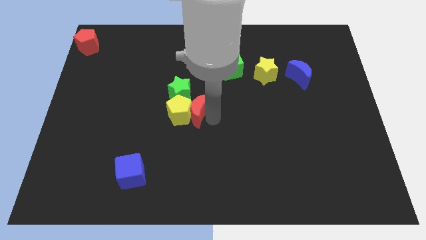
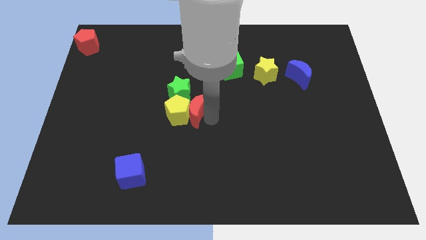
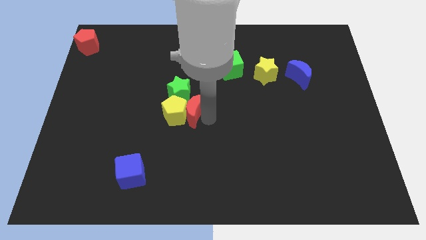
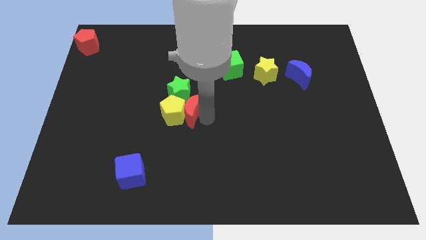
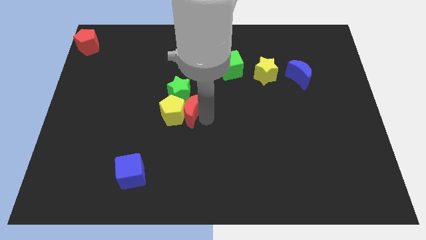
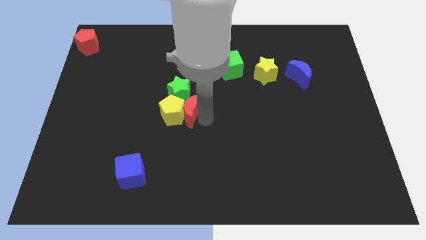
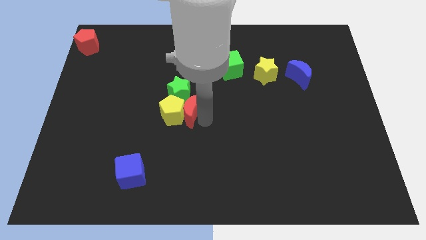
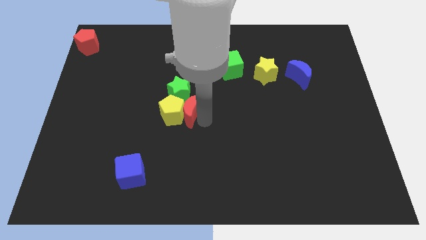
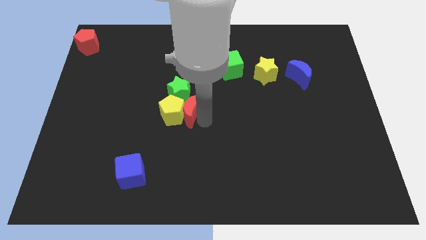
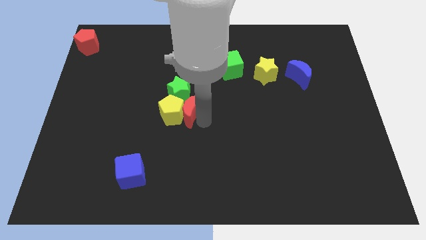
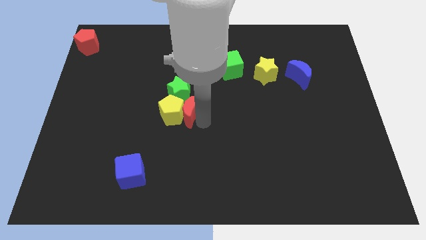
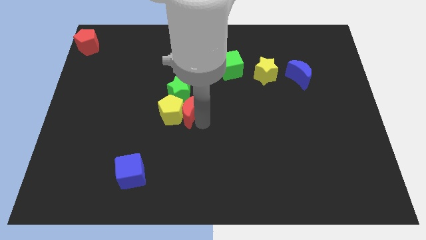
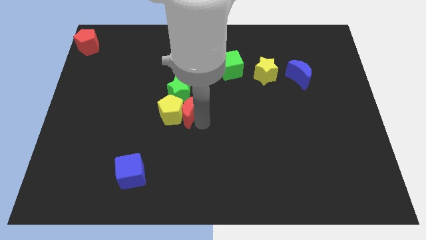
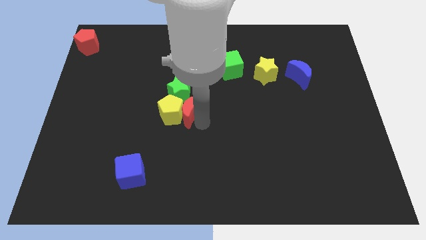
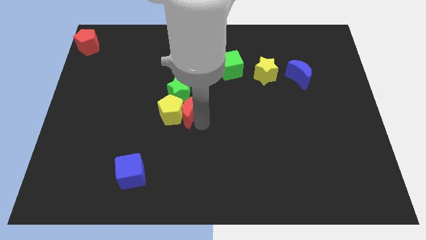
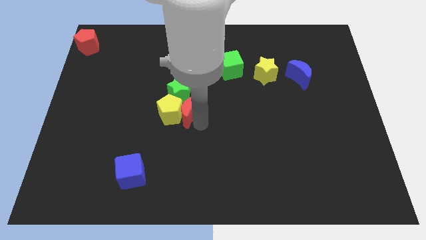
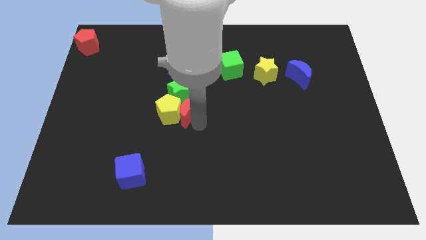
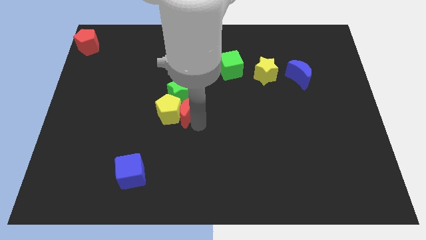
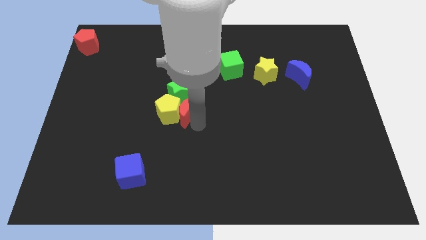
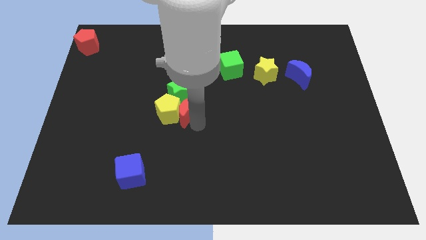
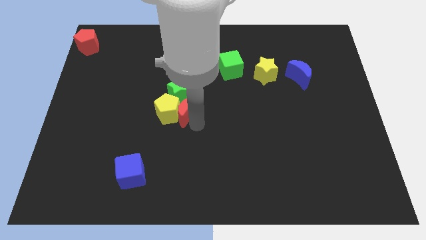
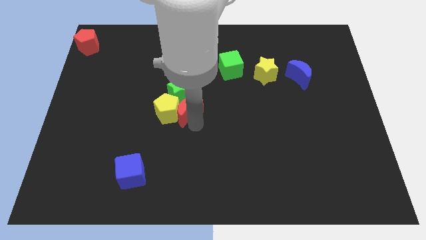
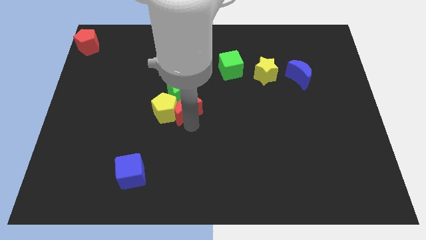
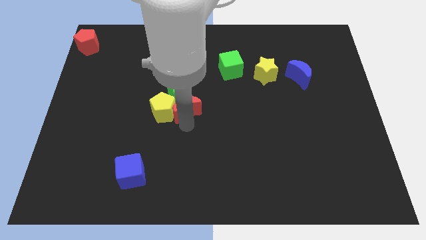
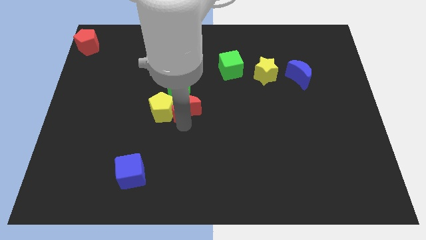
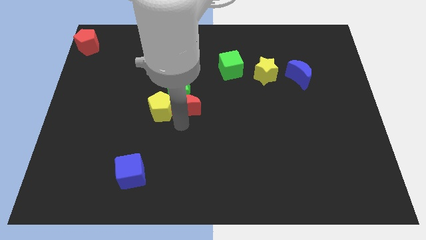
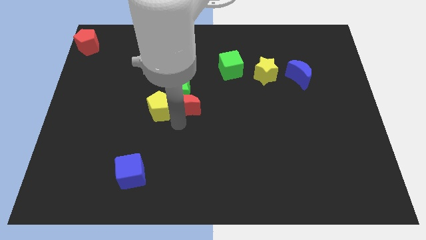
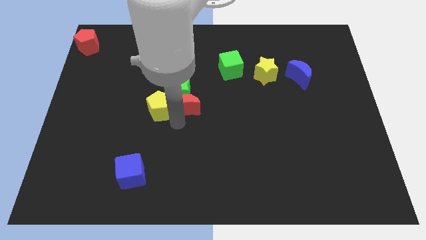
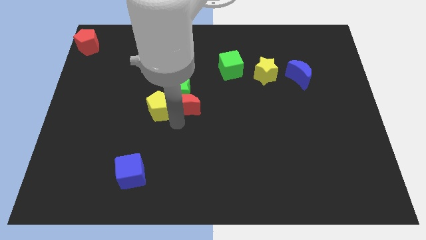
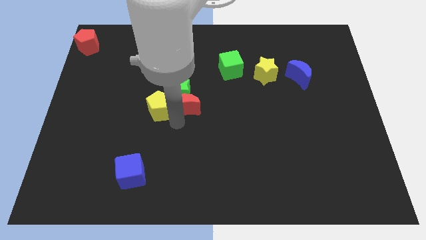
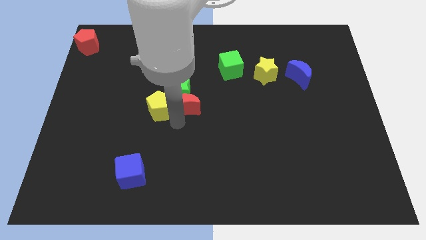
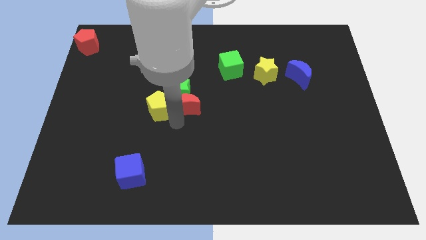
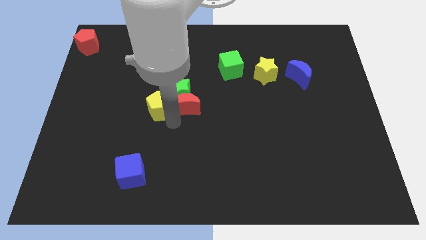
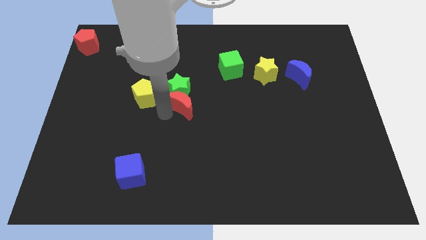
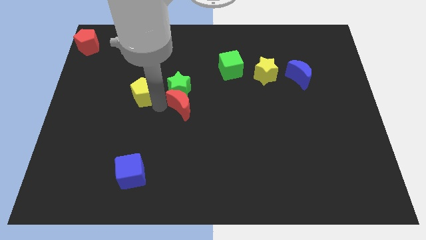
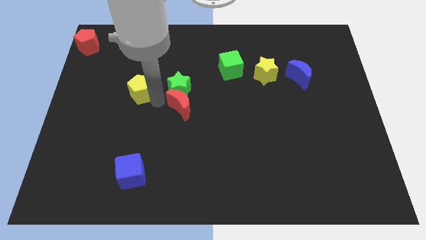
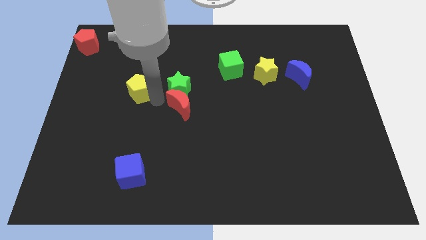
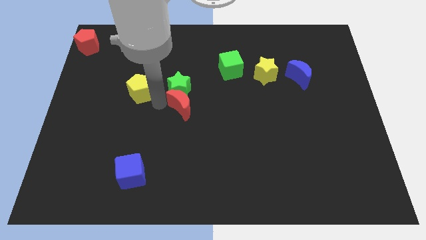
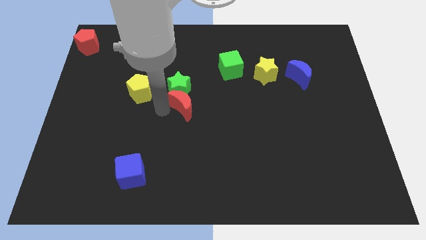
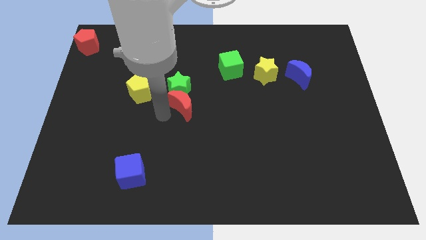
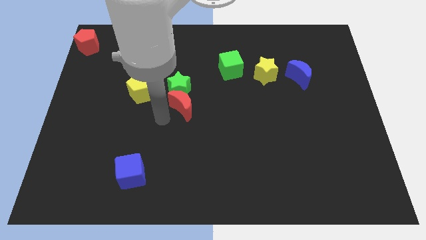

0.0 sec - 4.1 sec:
separate the yellow pentagon and red crescent

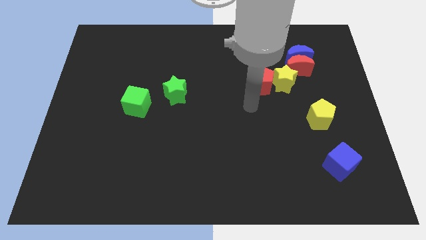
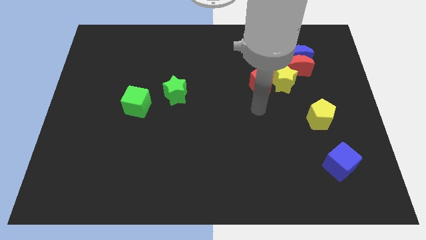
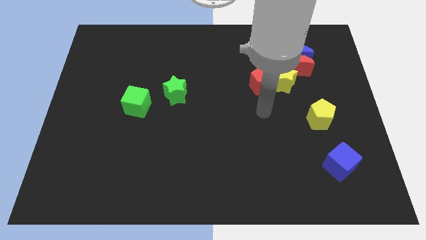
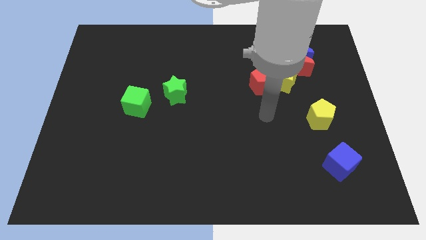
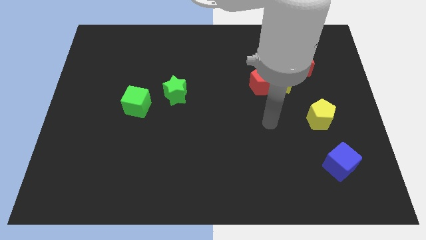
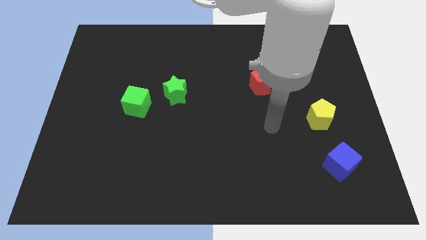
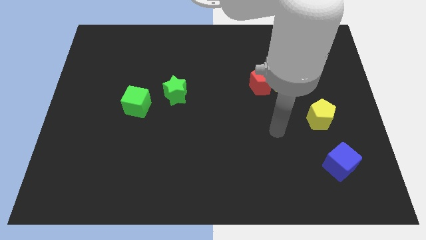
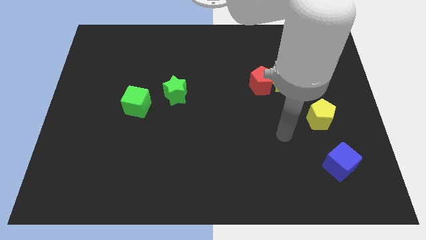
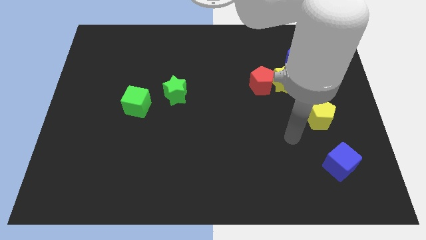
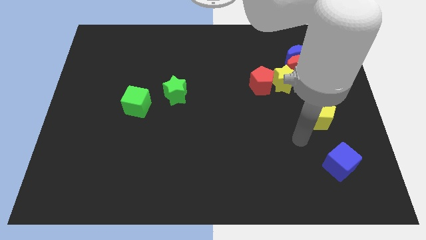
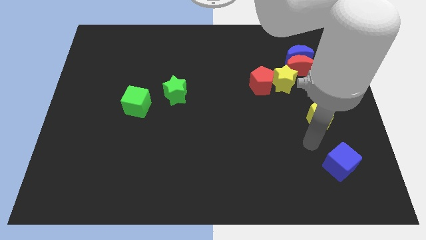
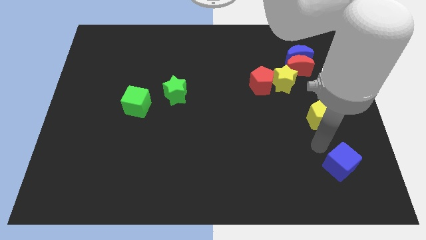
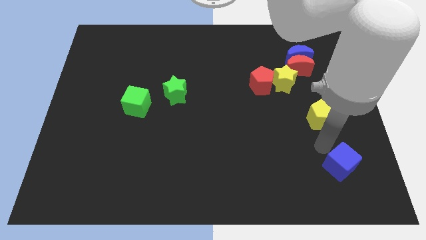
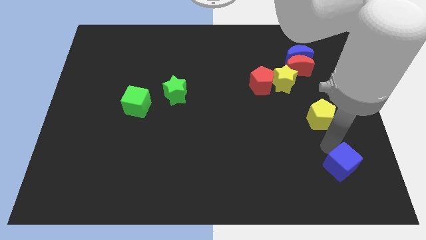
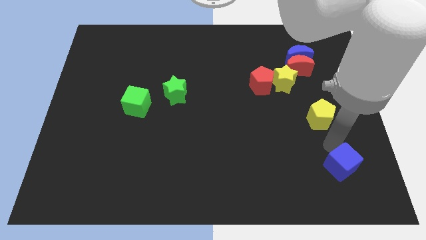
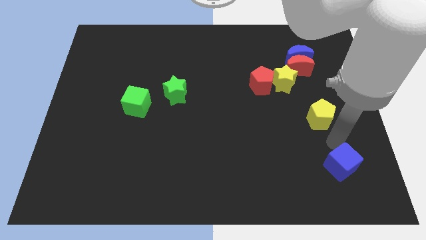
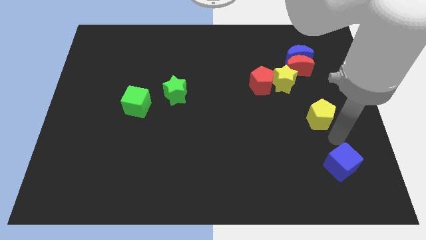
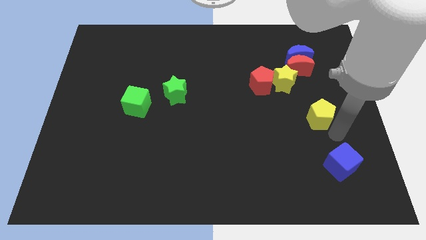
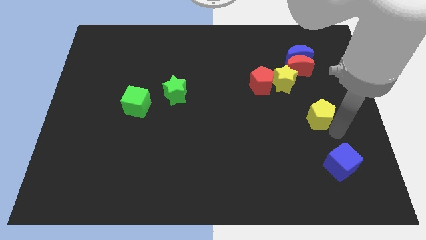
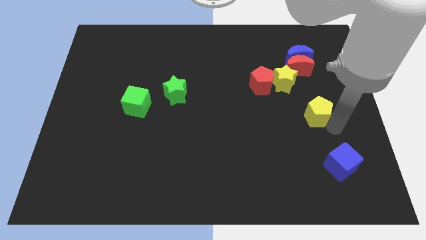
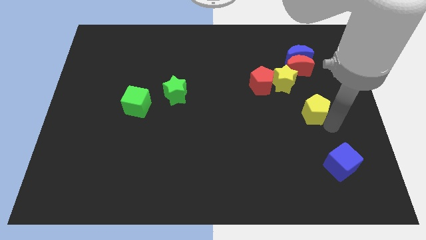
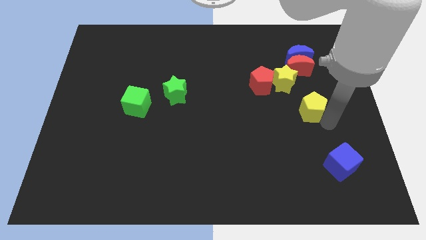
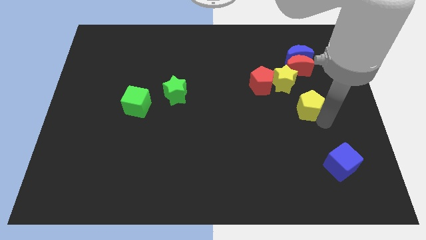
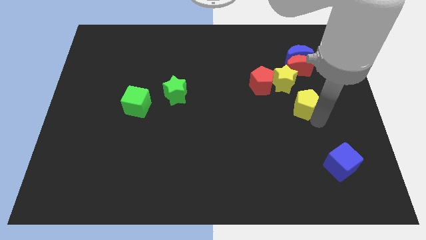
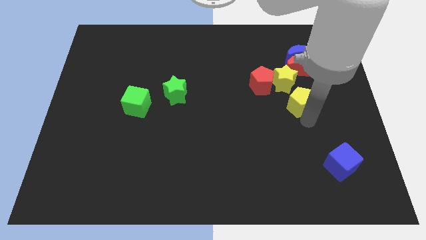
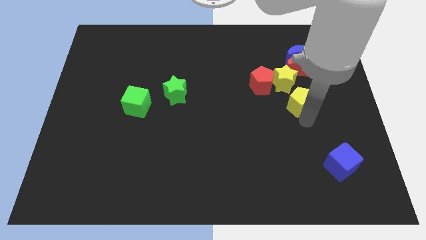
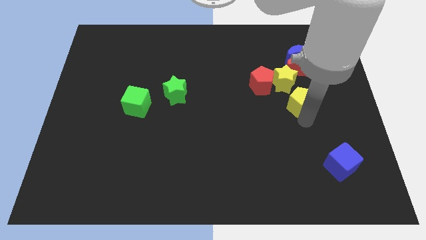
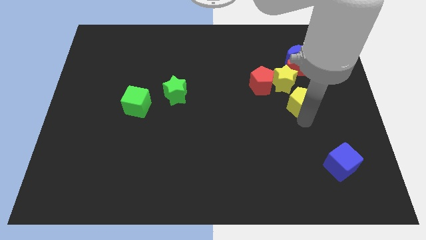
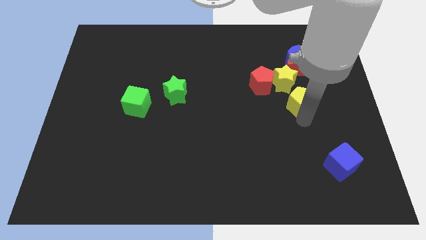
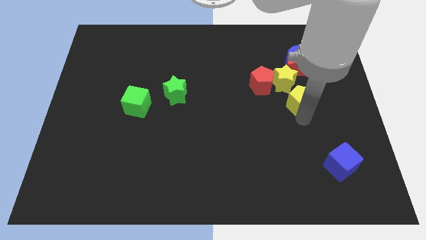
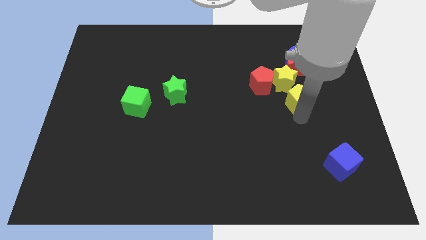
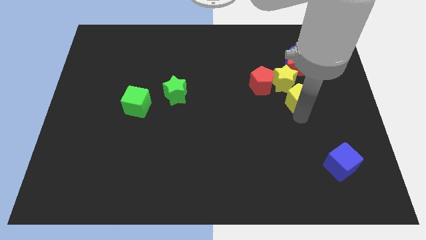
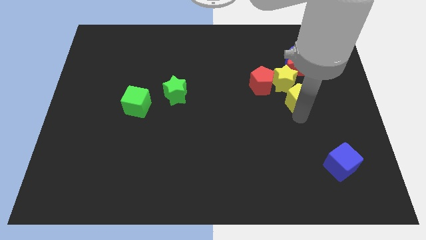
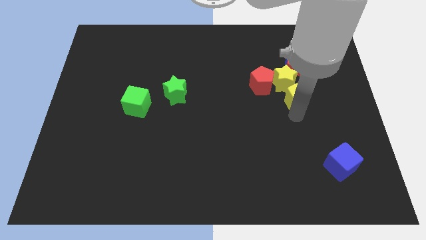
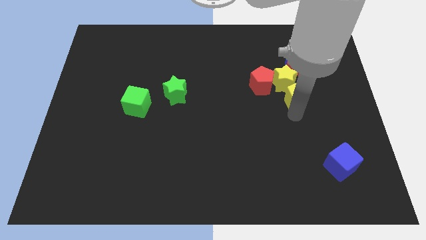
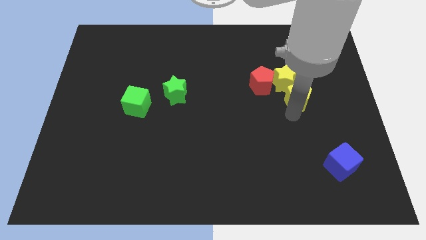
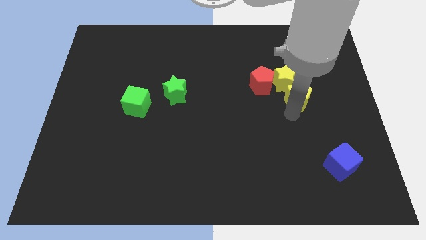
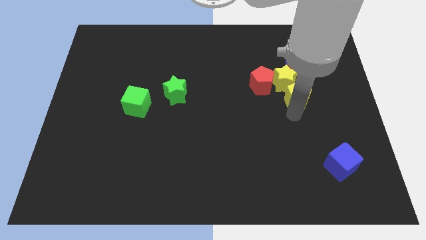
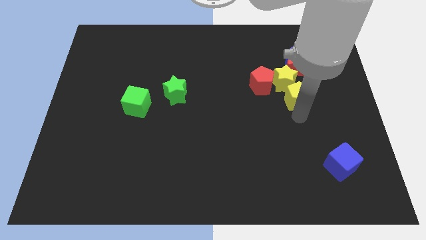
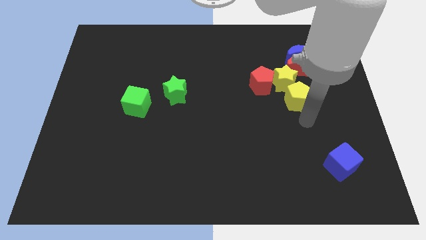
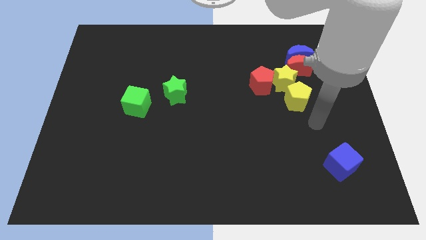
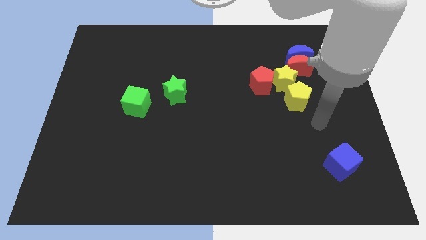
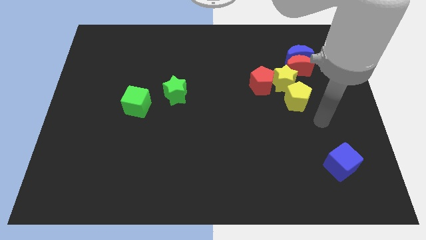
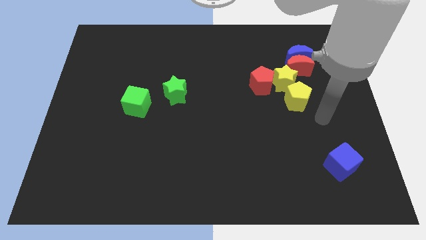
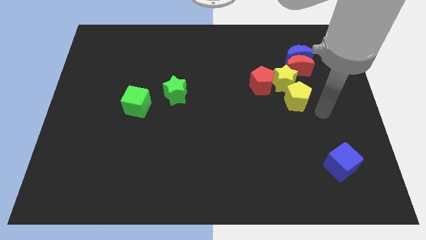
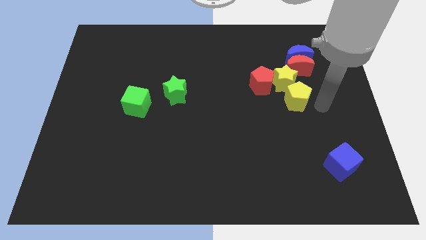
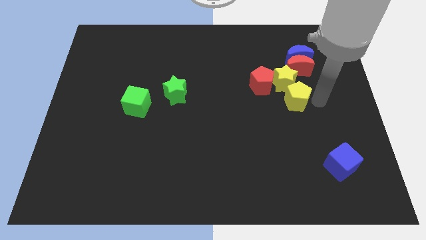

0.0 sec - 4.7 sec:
move the yellow pentagon to the bottom of the yellow star
